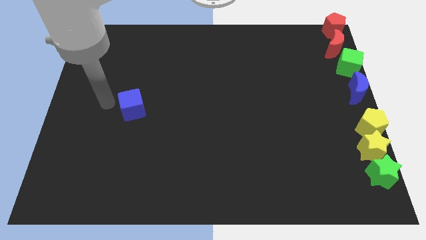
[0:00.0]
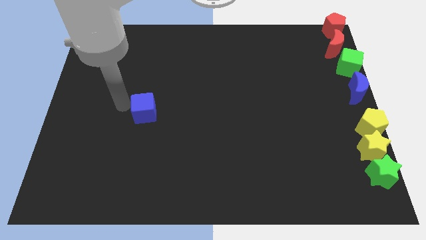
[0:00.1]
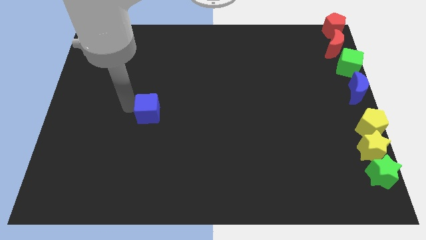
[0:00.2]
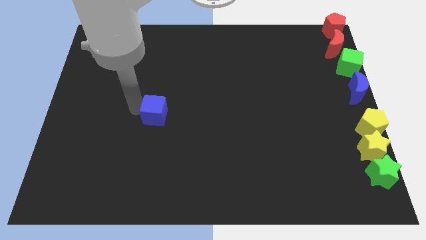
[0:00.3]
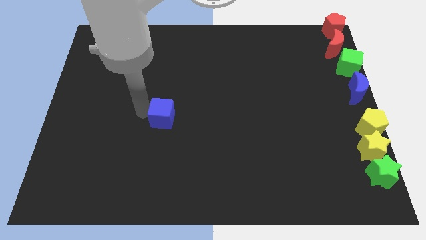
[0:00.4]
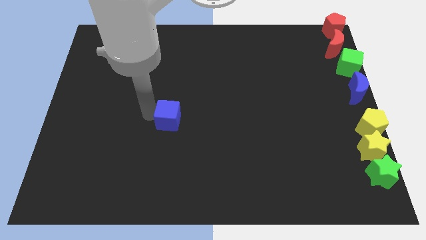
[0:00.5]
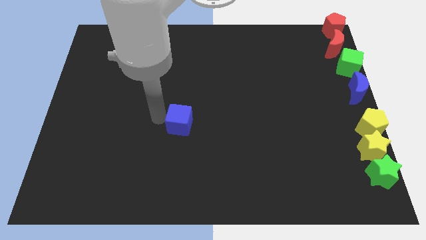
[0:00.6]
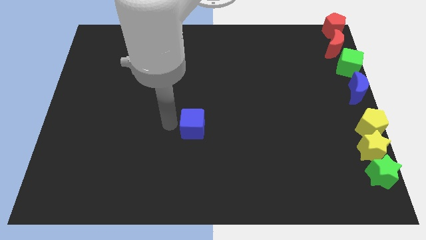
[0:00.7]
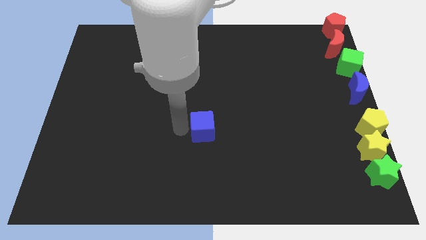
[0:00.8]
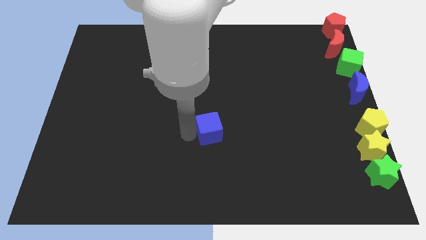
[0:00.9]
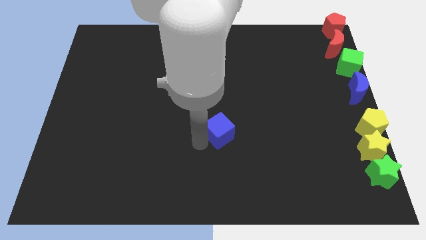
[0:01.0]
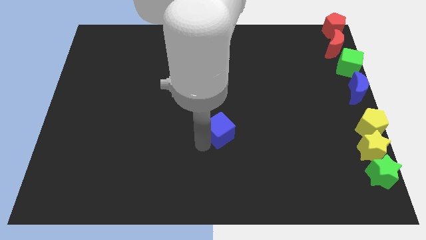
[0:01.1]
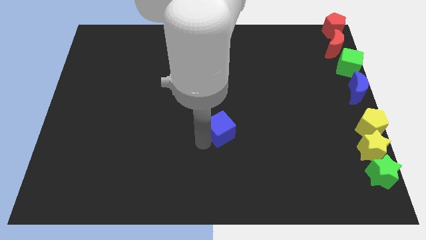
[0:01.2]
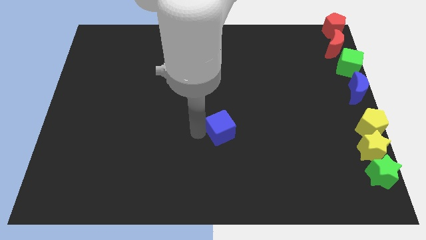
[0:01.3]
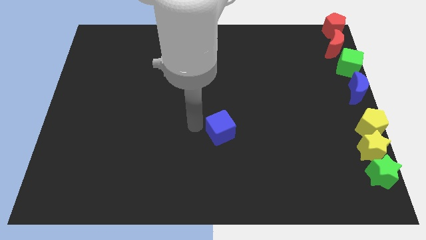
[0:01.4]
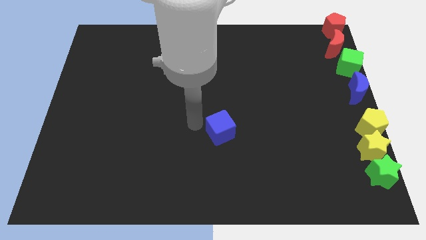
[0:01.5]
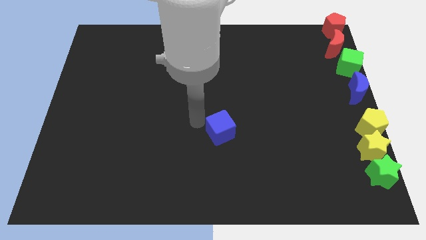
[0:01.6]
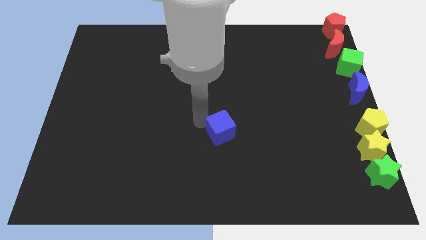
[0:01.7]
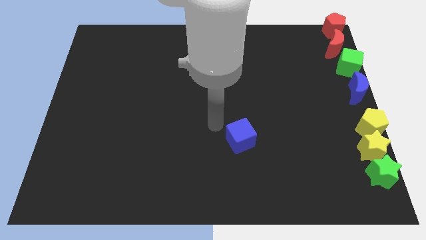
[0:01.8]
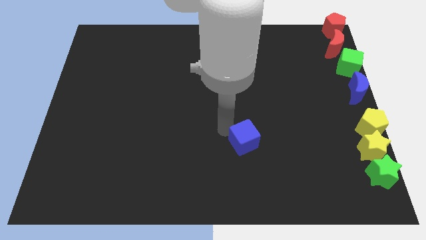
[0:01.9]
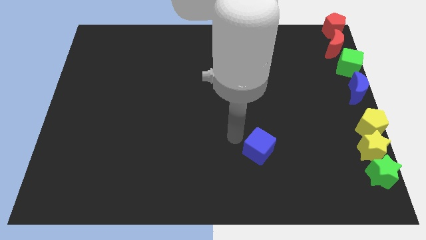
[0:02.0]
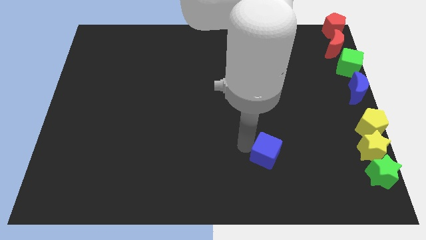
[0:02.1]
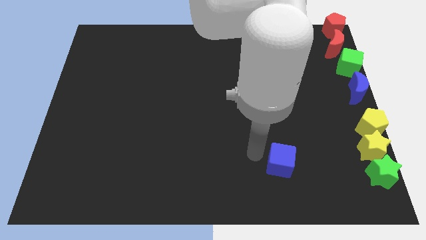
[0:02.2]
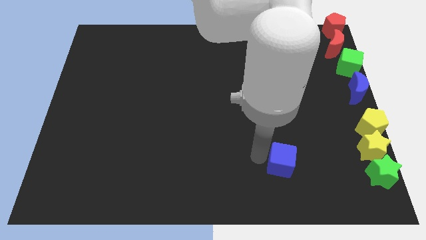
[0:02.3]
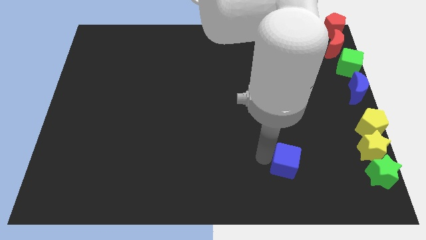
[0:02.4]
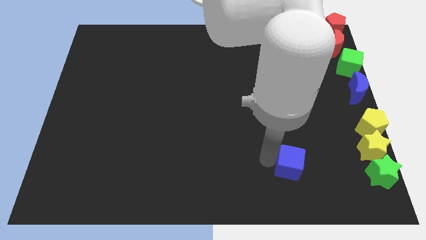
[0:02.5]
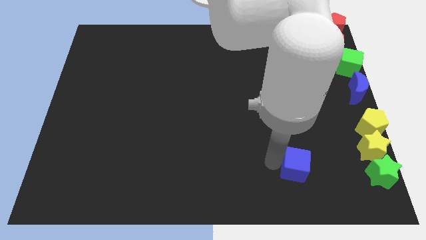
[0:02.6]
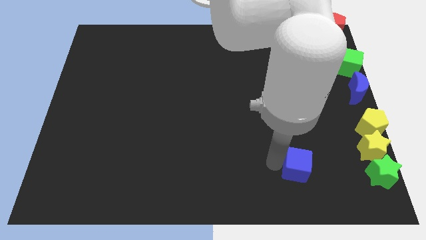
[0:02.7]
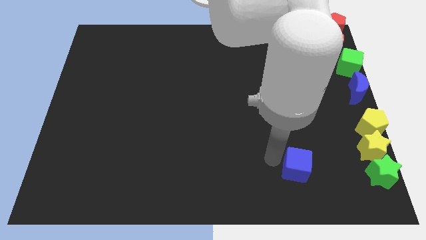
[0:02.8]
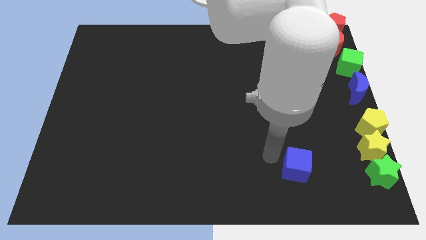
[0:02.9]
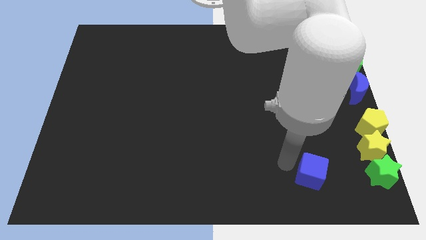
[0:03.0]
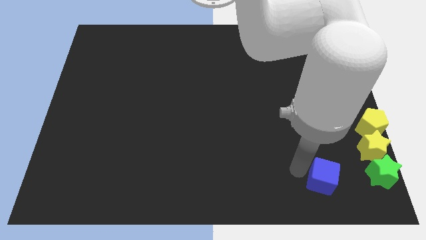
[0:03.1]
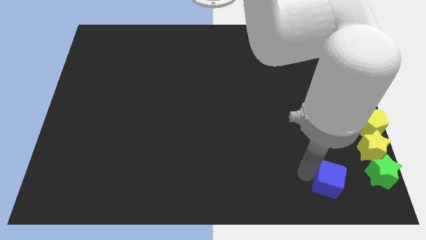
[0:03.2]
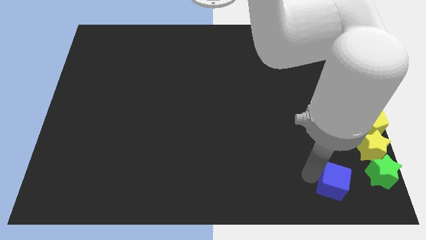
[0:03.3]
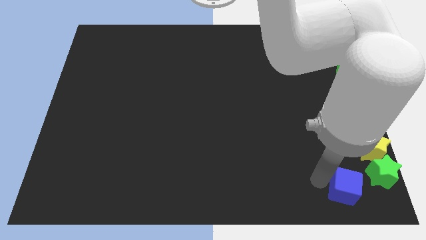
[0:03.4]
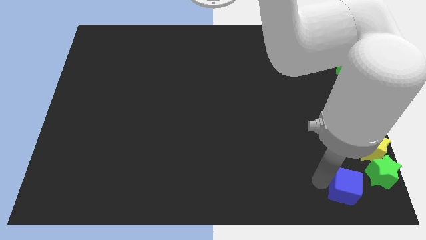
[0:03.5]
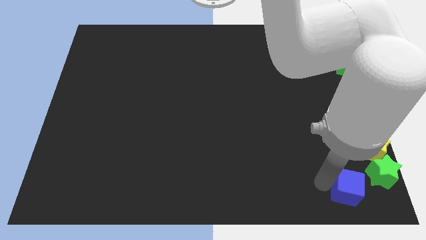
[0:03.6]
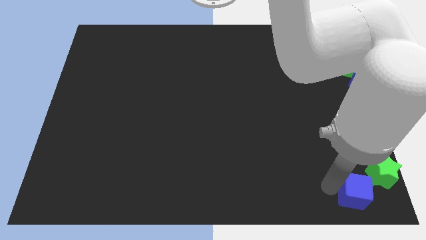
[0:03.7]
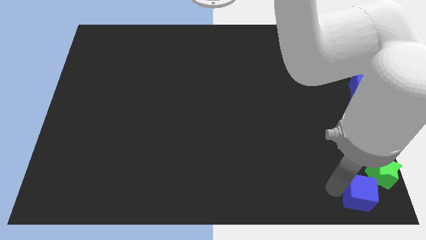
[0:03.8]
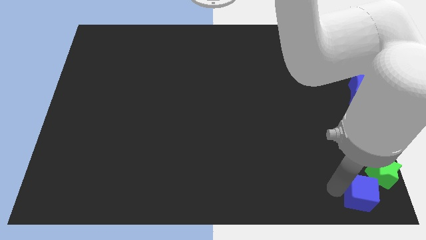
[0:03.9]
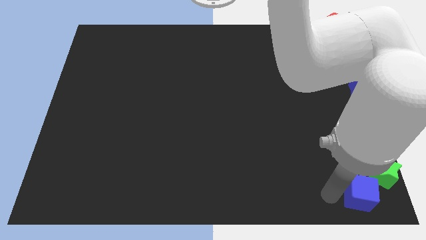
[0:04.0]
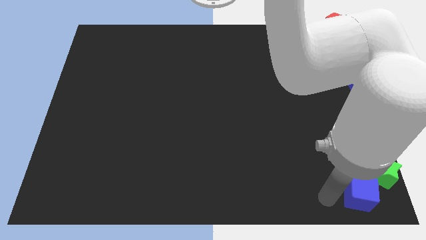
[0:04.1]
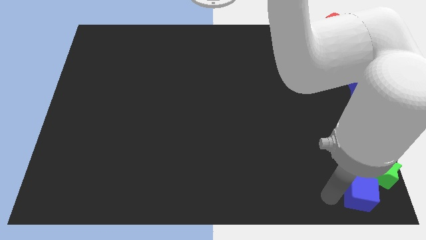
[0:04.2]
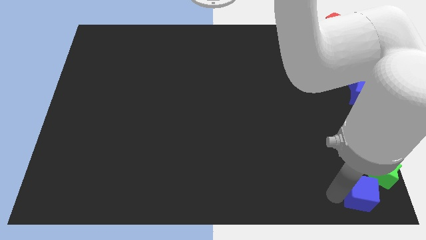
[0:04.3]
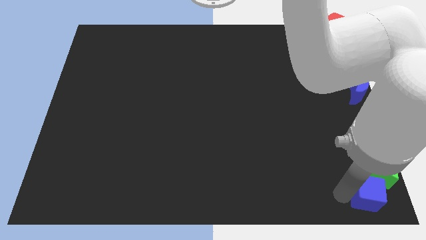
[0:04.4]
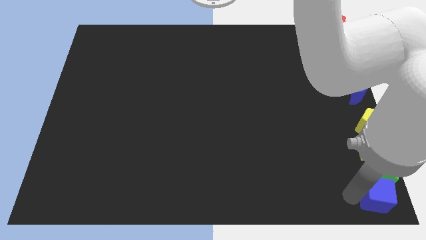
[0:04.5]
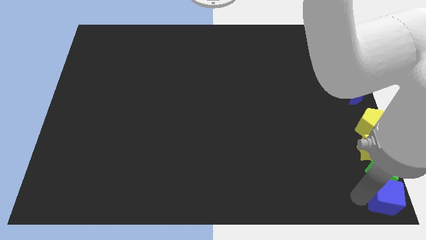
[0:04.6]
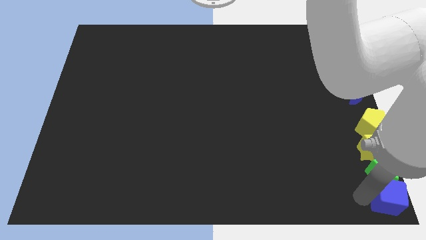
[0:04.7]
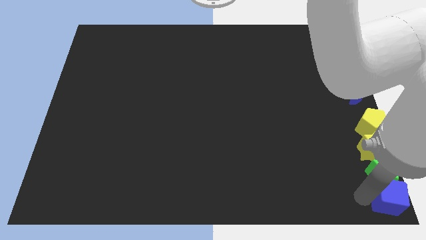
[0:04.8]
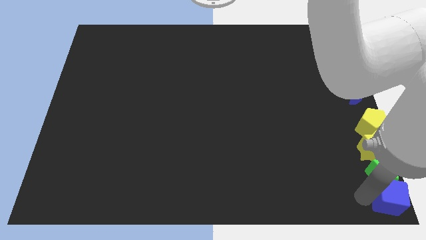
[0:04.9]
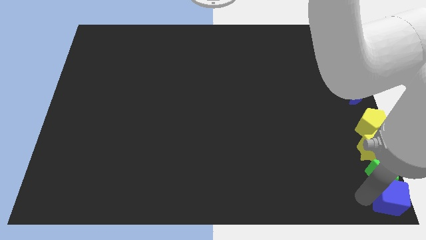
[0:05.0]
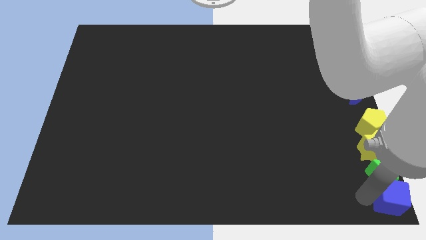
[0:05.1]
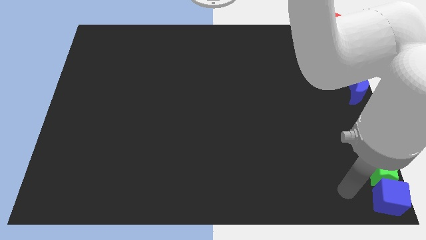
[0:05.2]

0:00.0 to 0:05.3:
move the blue cube below the green star

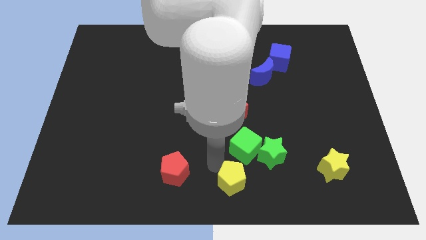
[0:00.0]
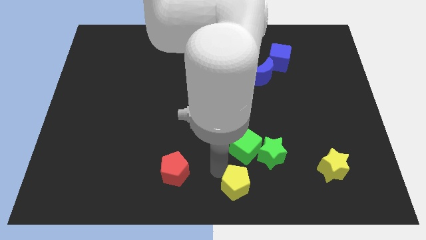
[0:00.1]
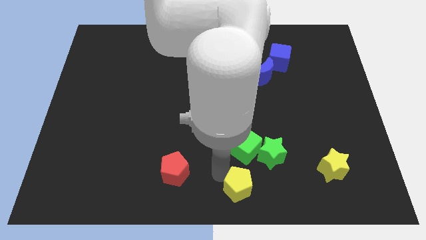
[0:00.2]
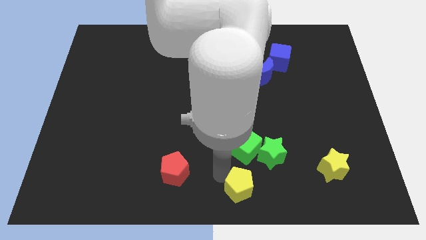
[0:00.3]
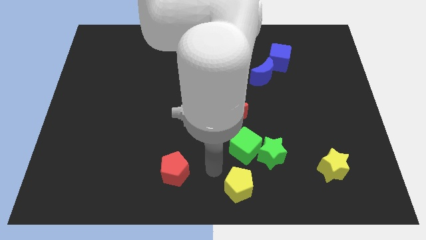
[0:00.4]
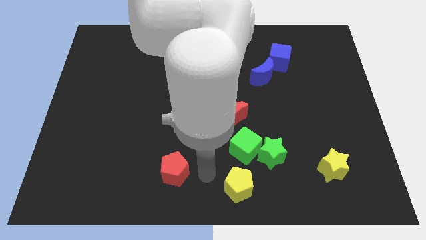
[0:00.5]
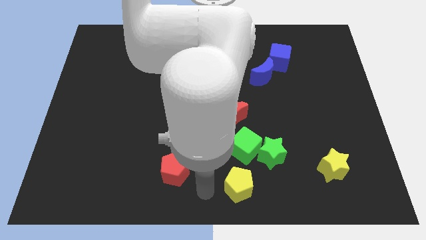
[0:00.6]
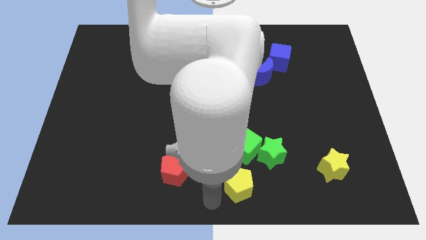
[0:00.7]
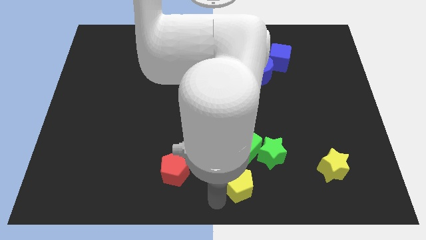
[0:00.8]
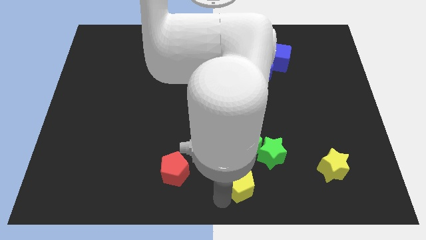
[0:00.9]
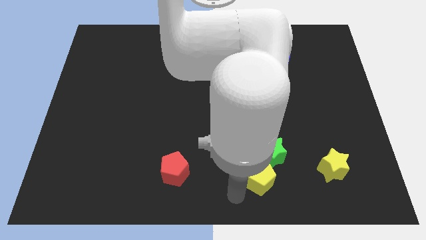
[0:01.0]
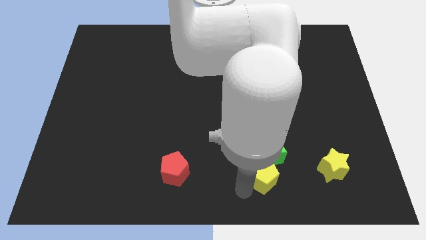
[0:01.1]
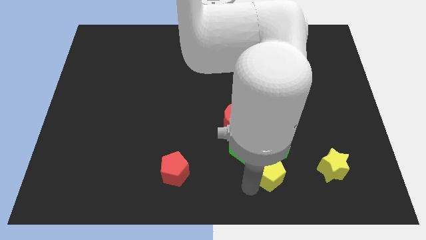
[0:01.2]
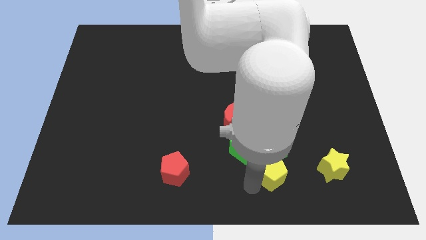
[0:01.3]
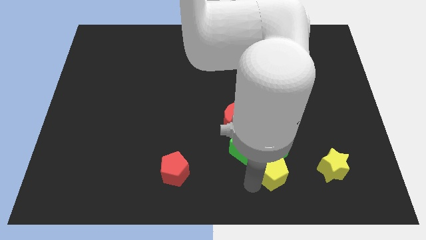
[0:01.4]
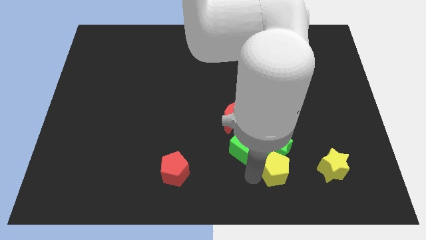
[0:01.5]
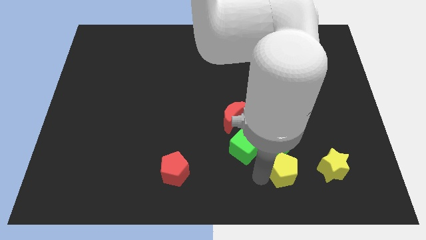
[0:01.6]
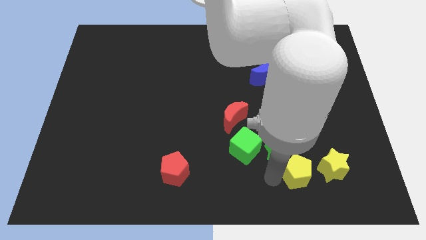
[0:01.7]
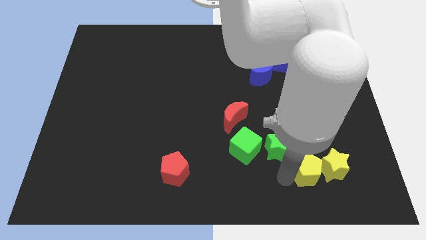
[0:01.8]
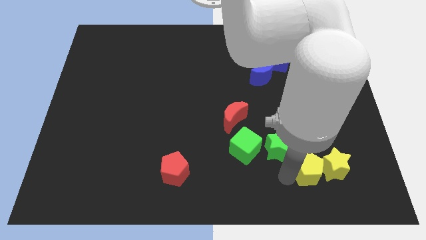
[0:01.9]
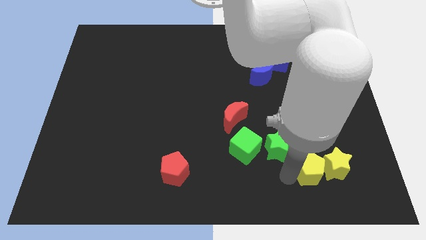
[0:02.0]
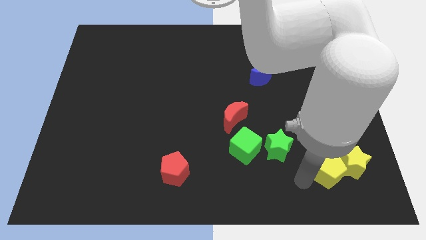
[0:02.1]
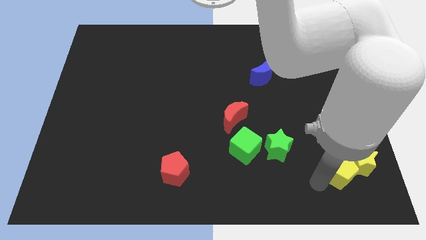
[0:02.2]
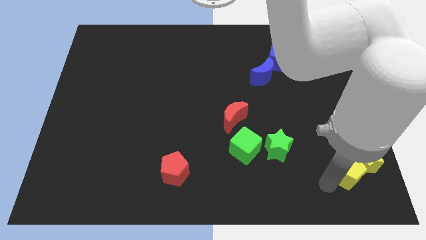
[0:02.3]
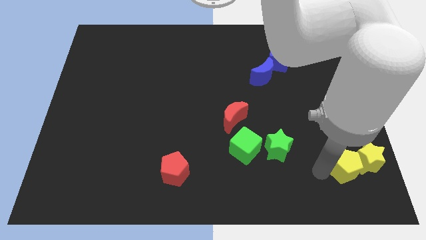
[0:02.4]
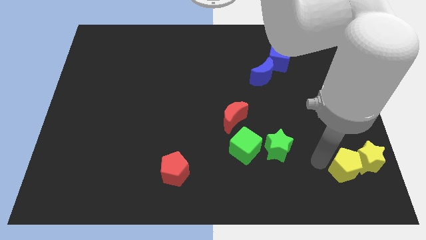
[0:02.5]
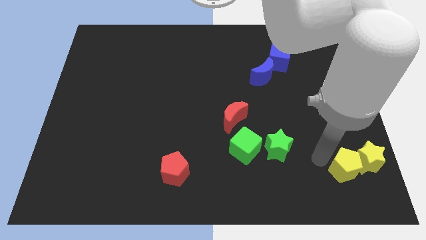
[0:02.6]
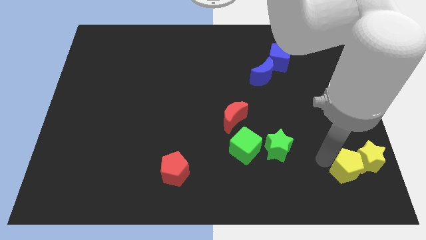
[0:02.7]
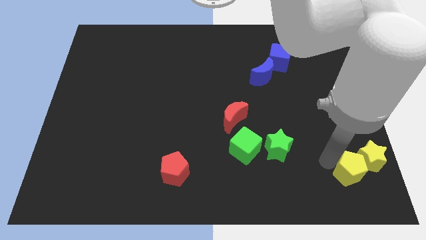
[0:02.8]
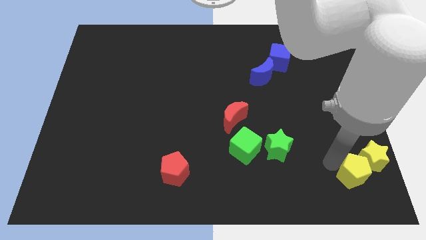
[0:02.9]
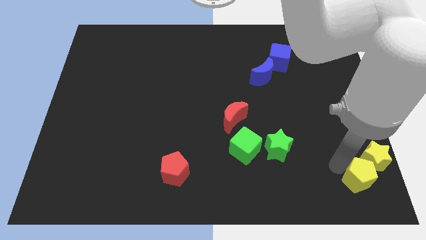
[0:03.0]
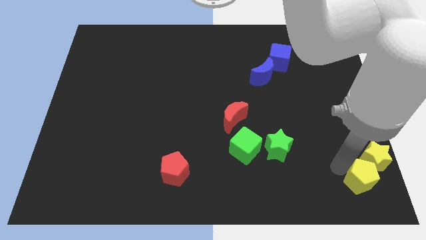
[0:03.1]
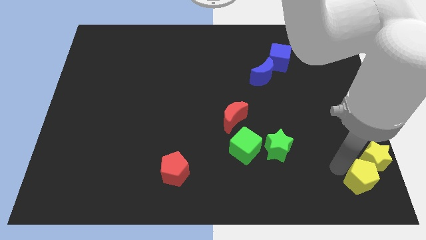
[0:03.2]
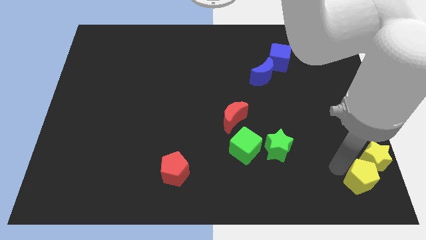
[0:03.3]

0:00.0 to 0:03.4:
push the yellow pentagon and yellow star towards the bottom right of the board

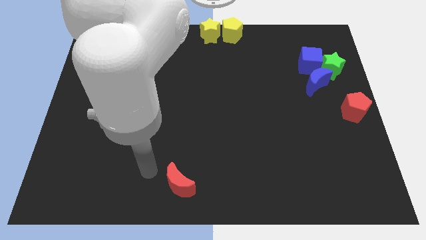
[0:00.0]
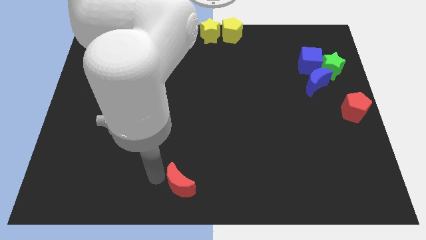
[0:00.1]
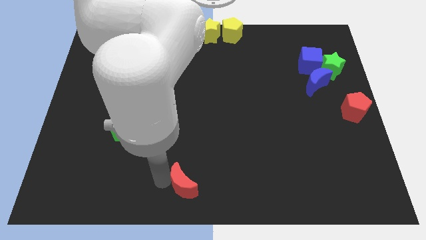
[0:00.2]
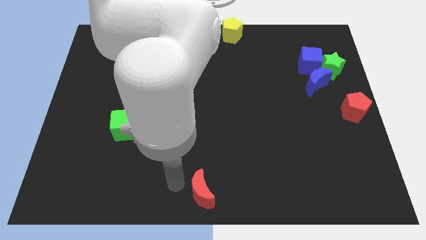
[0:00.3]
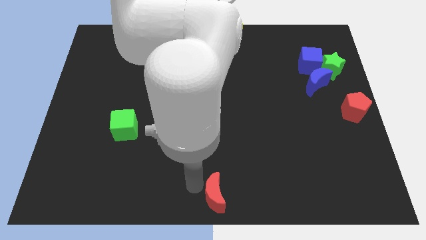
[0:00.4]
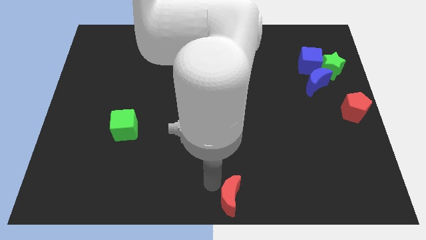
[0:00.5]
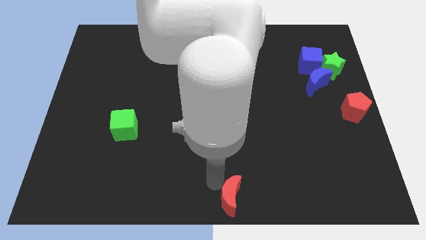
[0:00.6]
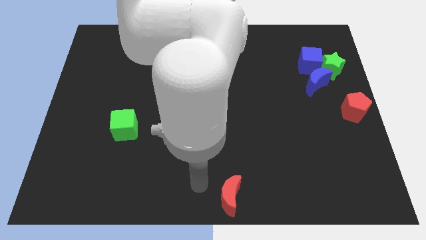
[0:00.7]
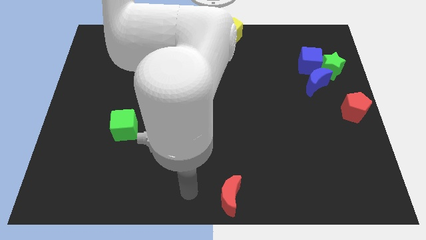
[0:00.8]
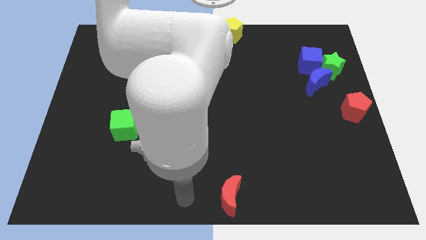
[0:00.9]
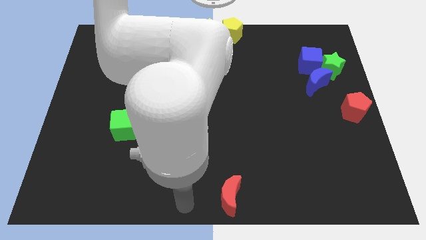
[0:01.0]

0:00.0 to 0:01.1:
place the red moon at the bottom center of the board
